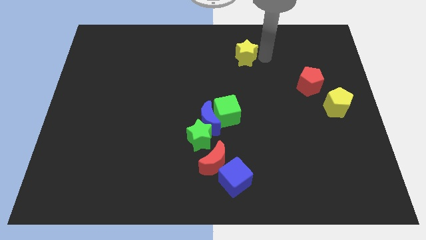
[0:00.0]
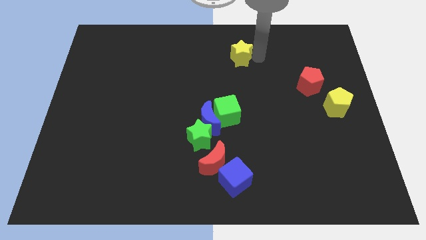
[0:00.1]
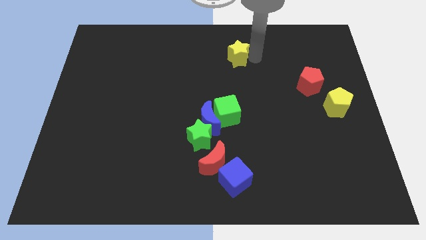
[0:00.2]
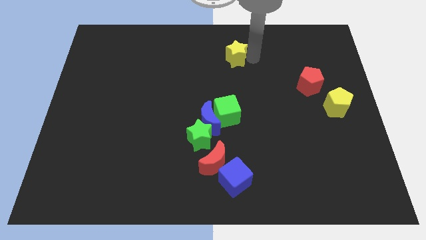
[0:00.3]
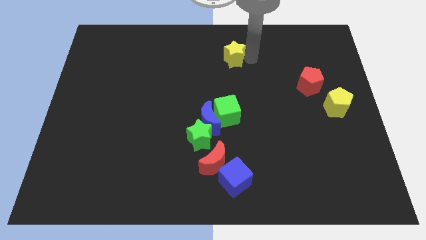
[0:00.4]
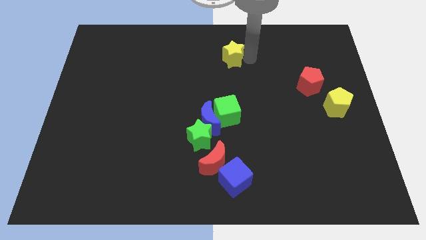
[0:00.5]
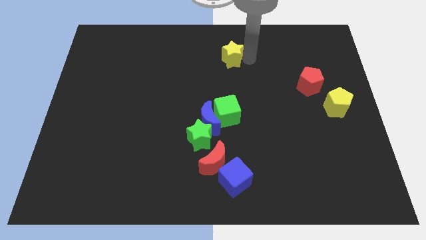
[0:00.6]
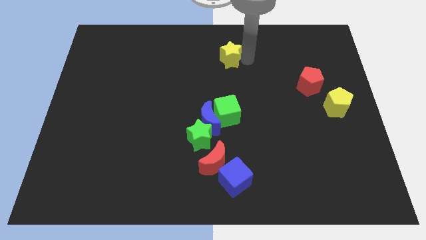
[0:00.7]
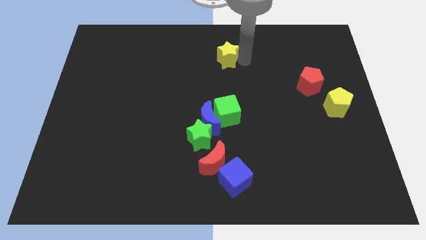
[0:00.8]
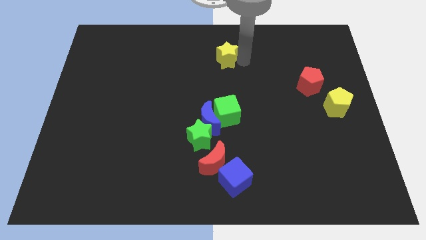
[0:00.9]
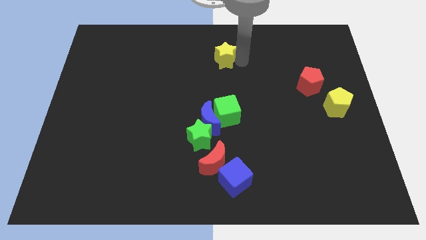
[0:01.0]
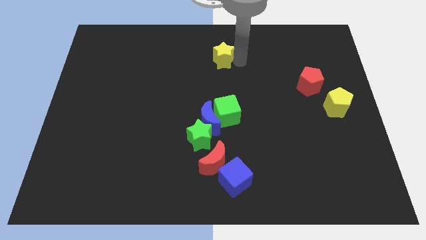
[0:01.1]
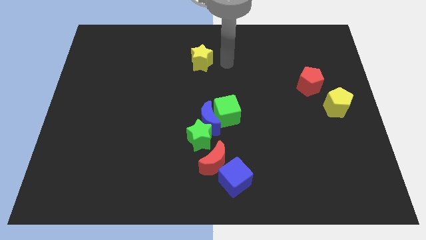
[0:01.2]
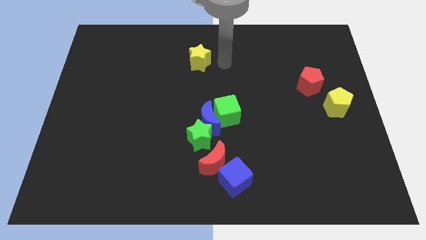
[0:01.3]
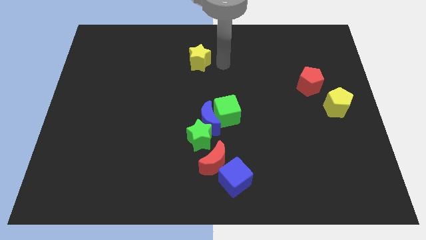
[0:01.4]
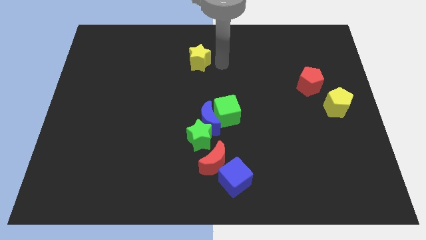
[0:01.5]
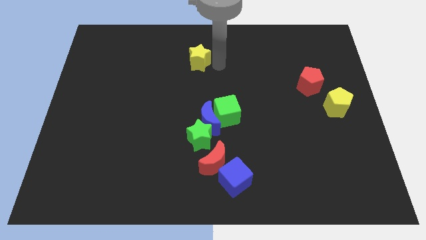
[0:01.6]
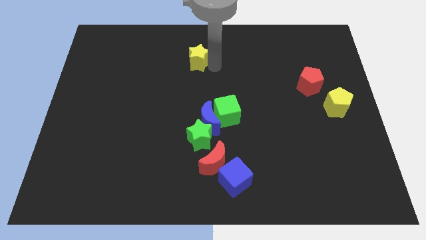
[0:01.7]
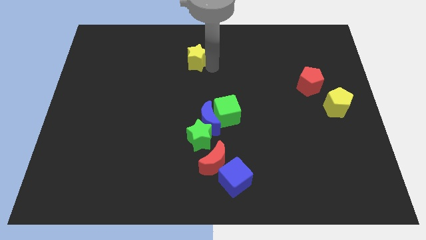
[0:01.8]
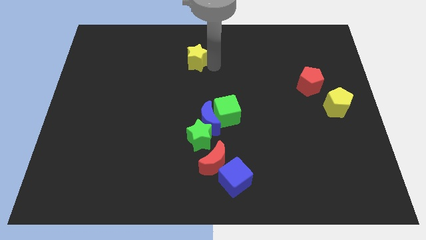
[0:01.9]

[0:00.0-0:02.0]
drag yellow star towards left side of the board

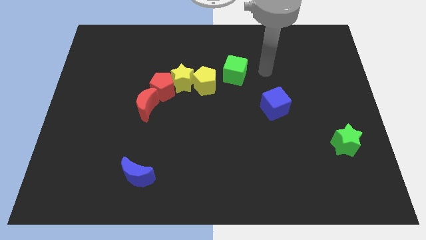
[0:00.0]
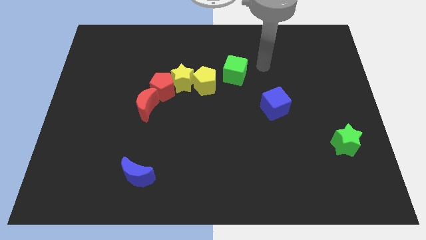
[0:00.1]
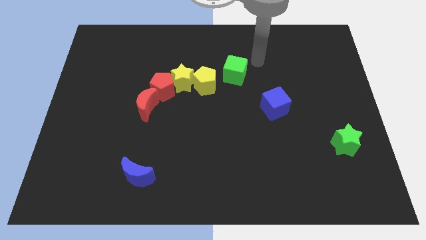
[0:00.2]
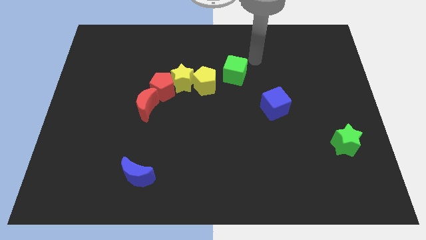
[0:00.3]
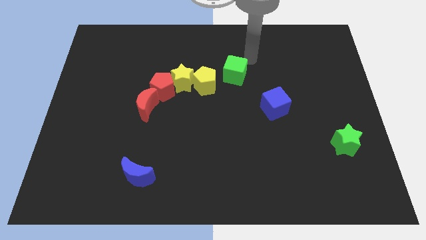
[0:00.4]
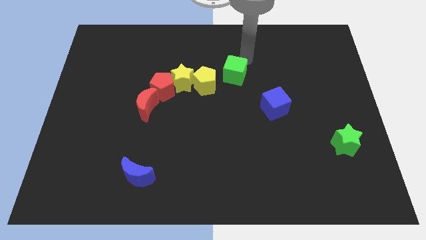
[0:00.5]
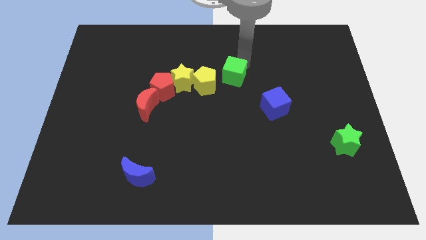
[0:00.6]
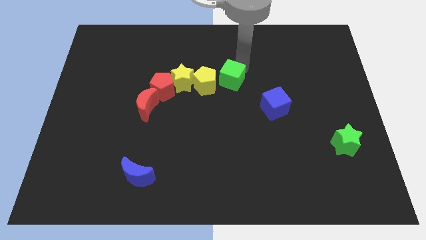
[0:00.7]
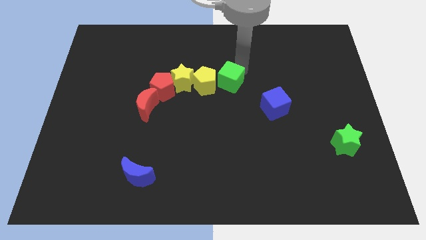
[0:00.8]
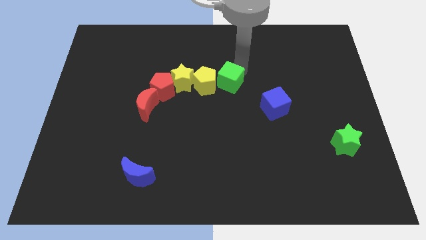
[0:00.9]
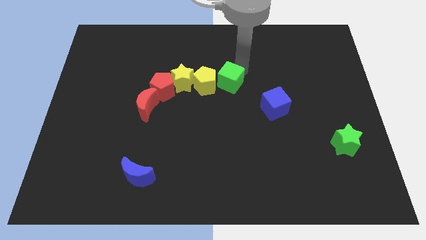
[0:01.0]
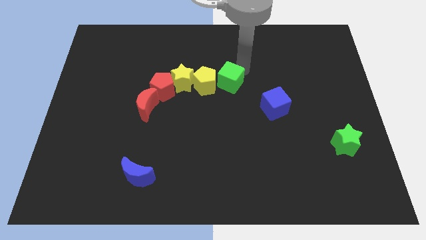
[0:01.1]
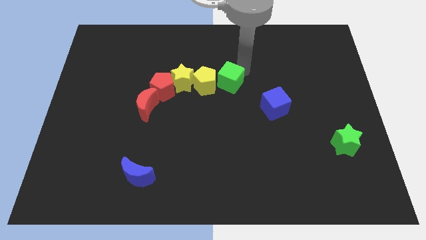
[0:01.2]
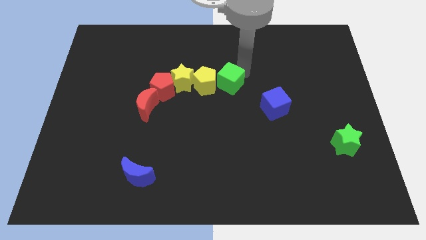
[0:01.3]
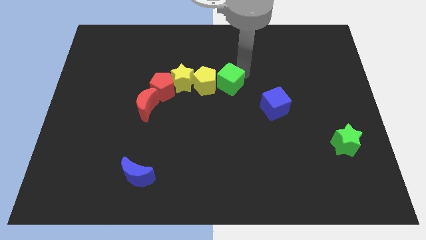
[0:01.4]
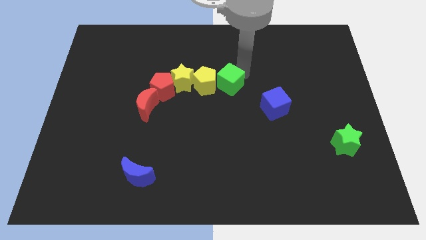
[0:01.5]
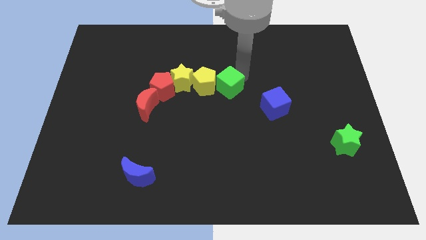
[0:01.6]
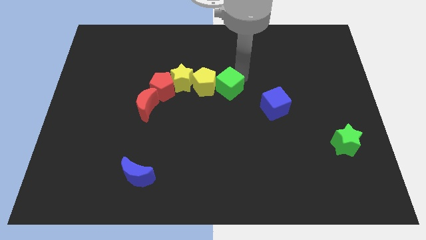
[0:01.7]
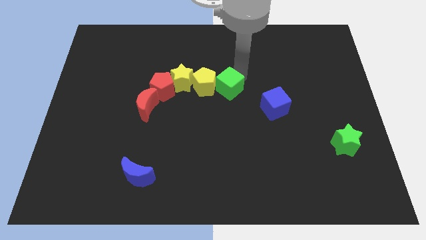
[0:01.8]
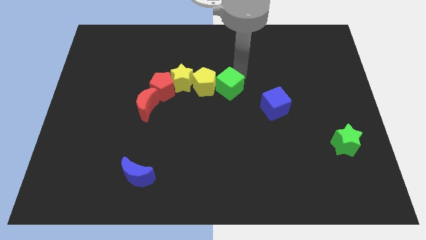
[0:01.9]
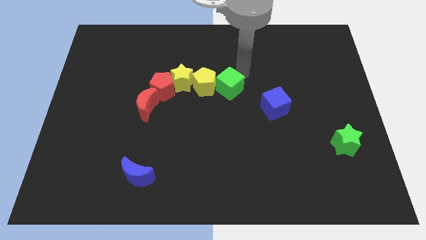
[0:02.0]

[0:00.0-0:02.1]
push the green cube at the right side of the yellow pentagon

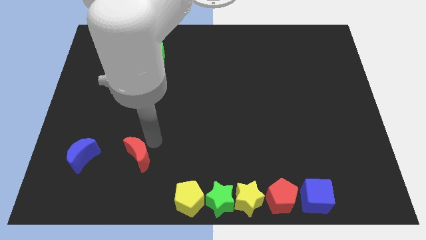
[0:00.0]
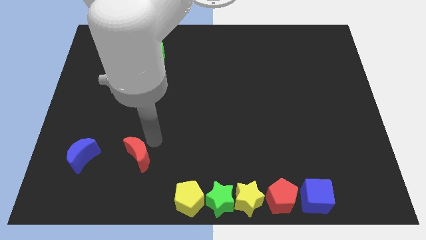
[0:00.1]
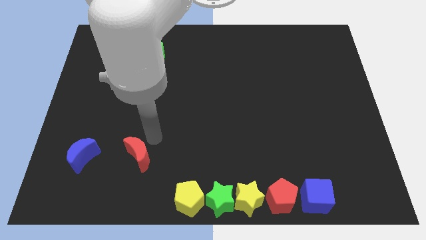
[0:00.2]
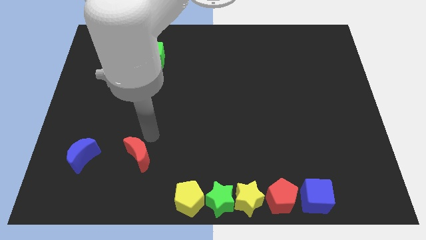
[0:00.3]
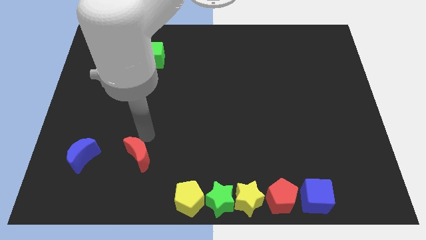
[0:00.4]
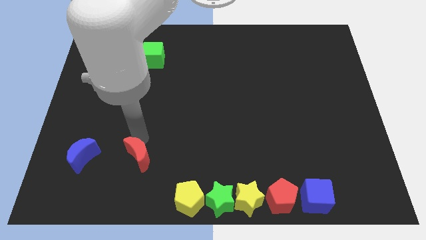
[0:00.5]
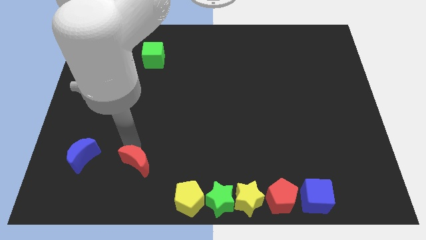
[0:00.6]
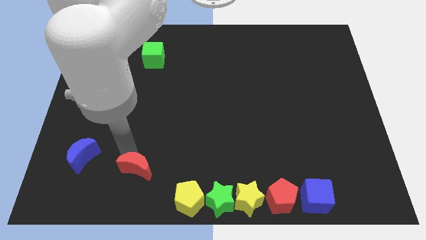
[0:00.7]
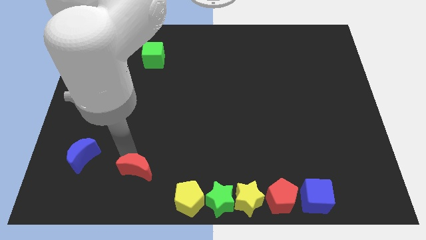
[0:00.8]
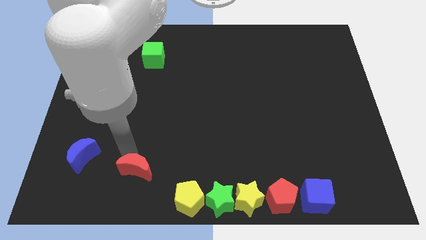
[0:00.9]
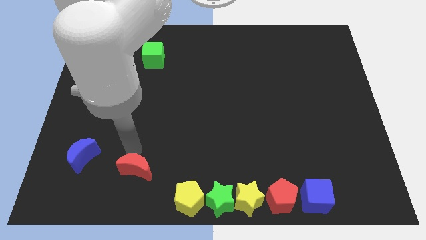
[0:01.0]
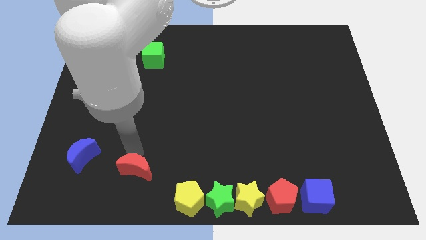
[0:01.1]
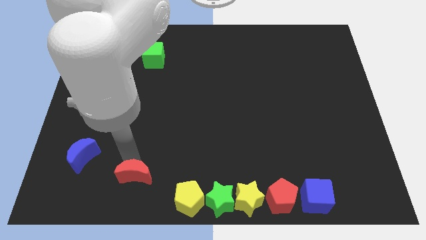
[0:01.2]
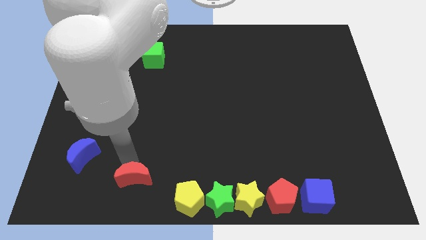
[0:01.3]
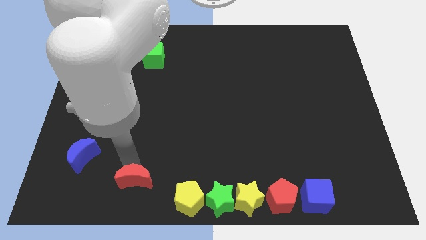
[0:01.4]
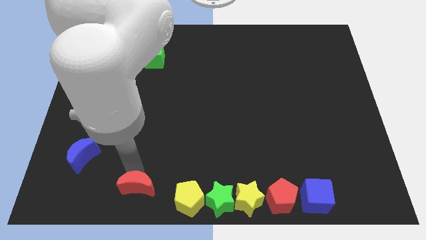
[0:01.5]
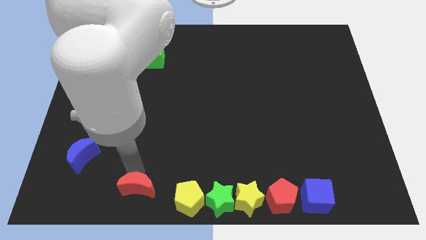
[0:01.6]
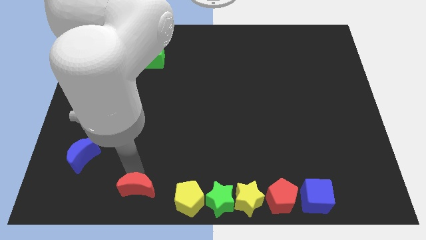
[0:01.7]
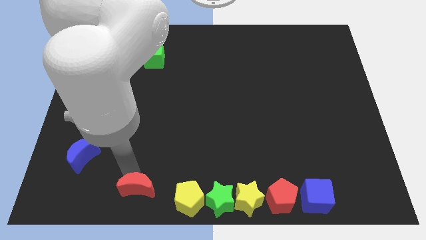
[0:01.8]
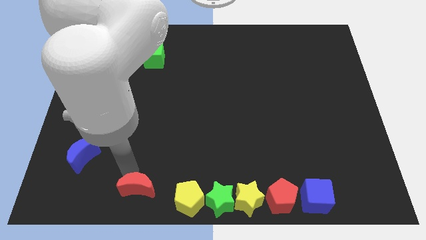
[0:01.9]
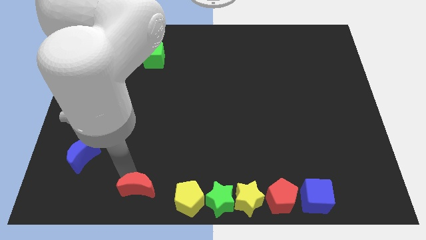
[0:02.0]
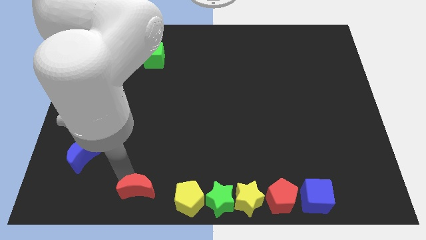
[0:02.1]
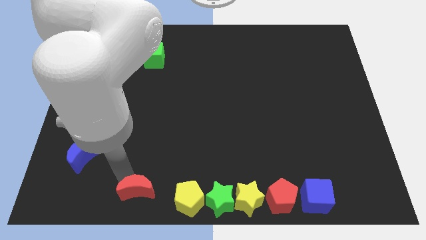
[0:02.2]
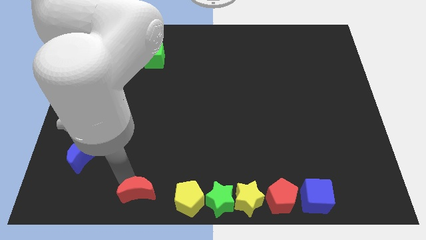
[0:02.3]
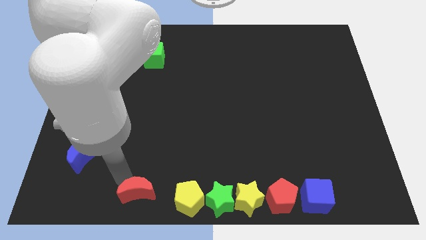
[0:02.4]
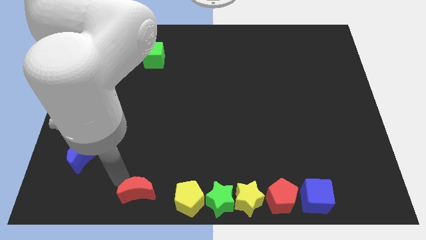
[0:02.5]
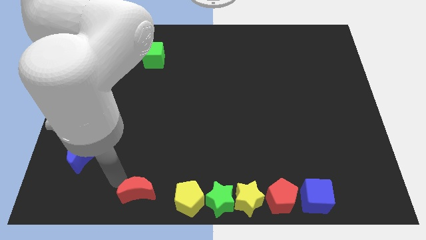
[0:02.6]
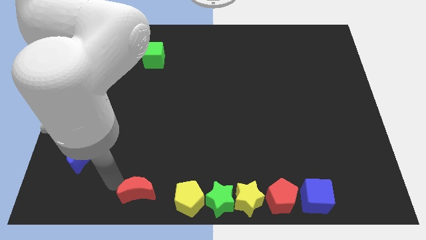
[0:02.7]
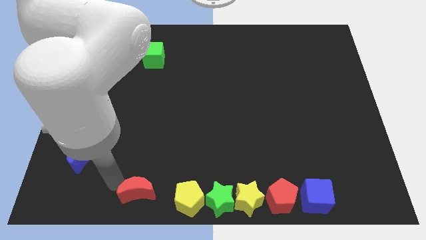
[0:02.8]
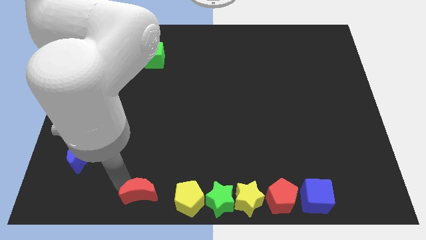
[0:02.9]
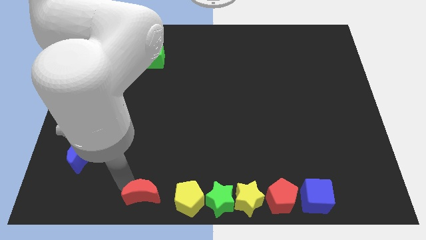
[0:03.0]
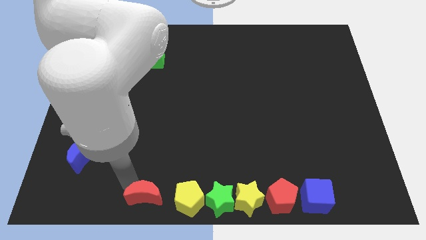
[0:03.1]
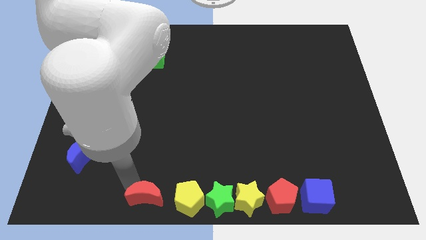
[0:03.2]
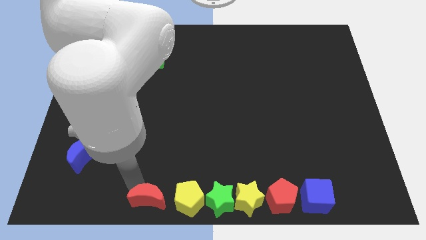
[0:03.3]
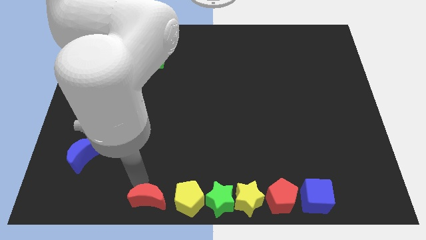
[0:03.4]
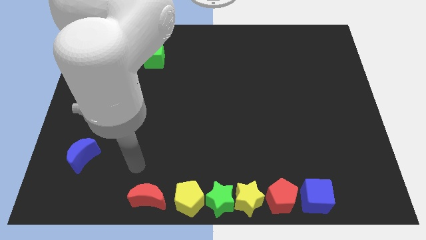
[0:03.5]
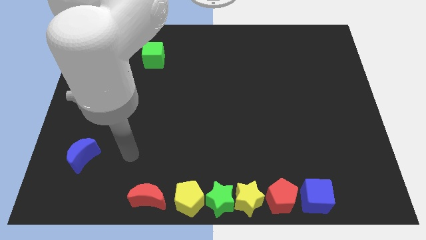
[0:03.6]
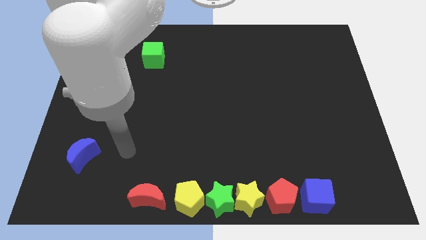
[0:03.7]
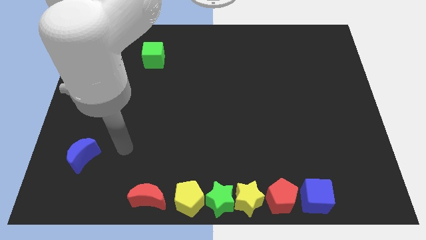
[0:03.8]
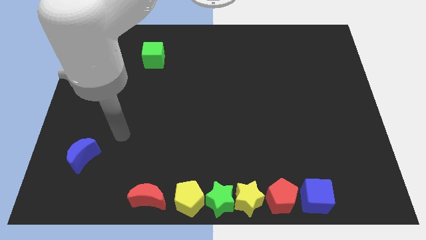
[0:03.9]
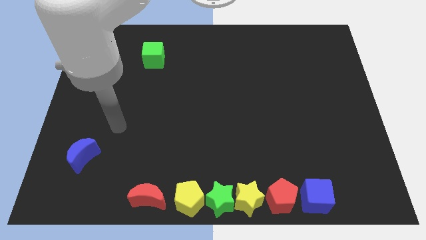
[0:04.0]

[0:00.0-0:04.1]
push the red crecscent to the left of the yellow pentagon

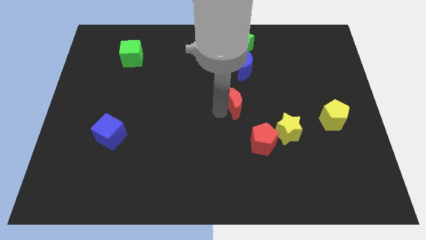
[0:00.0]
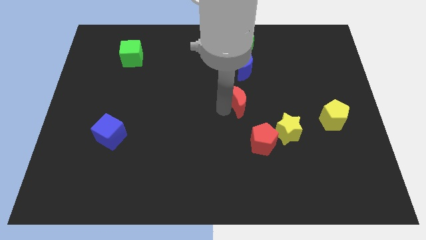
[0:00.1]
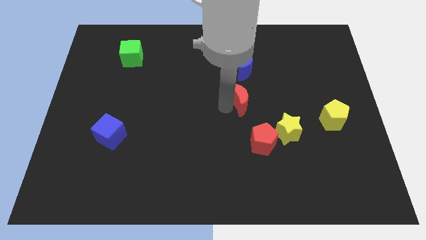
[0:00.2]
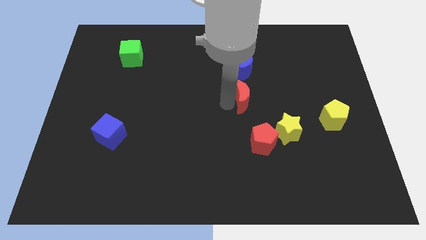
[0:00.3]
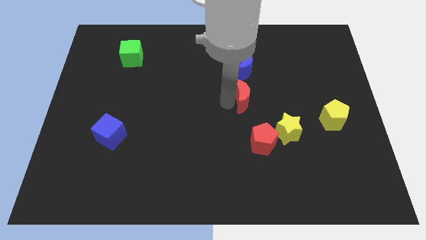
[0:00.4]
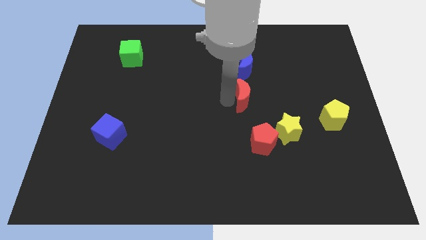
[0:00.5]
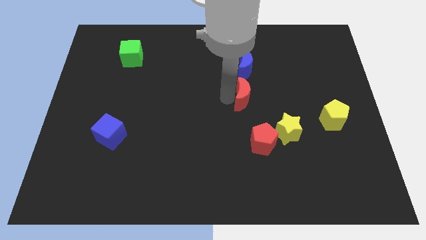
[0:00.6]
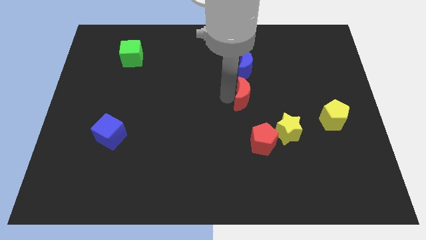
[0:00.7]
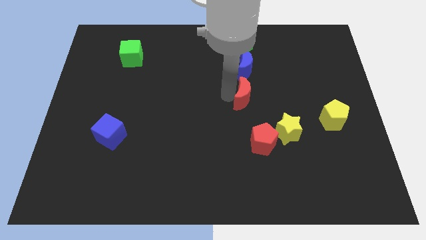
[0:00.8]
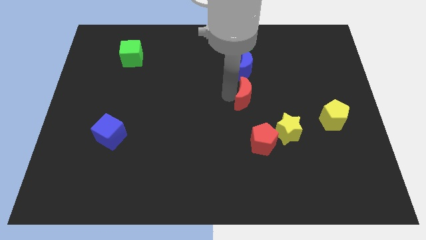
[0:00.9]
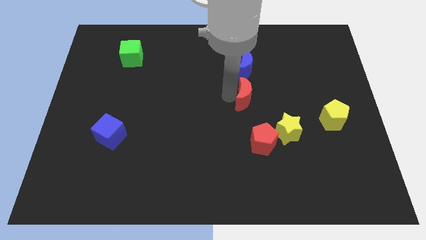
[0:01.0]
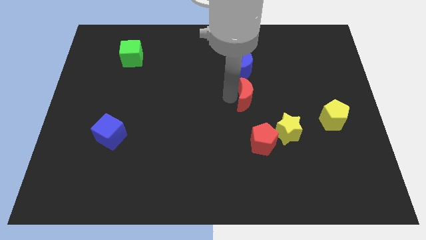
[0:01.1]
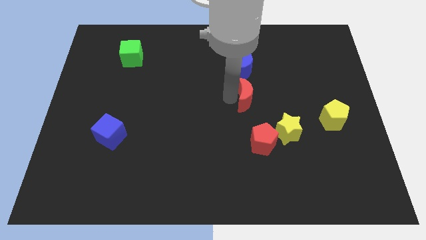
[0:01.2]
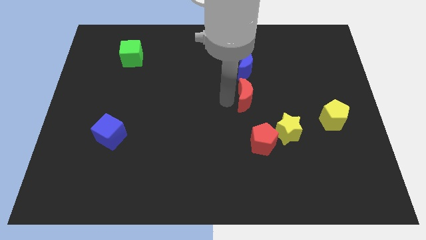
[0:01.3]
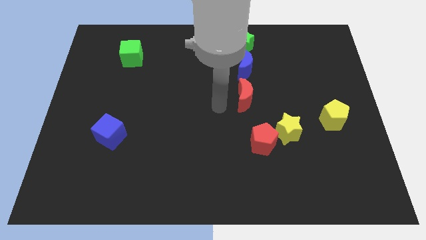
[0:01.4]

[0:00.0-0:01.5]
place the red moon below the blue moon
